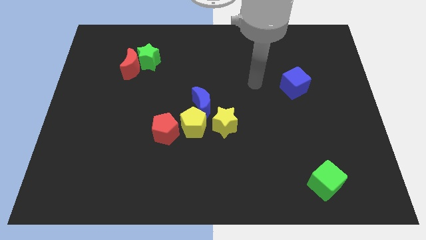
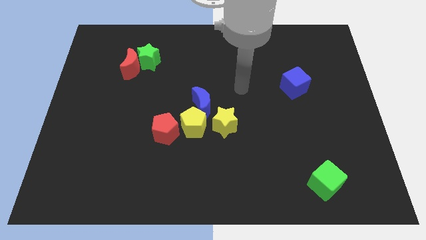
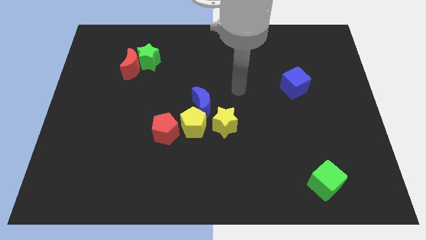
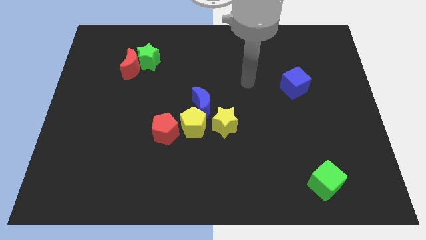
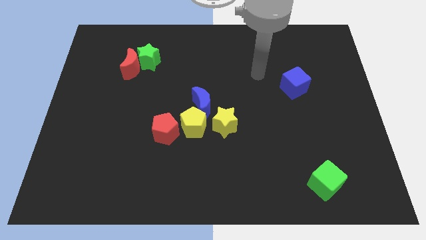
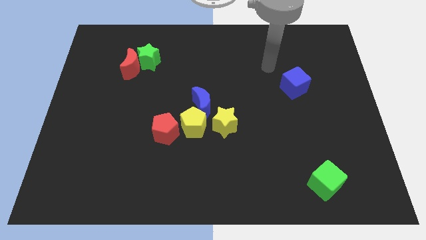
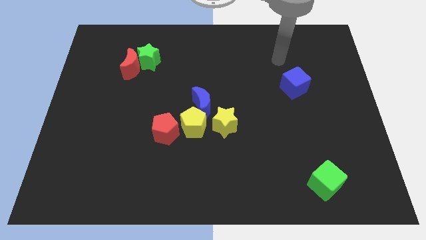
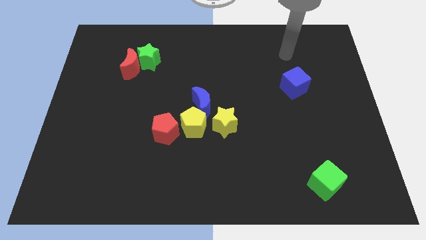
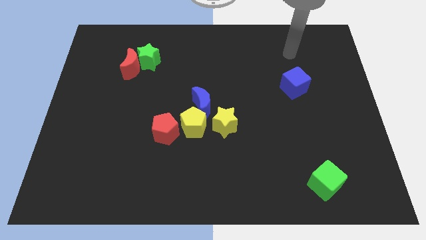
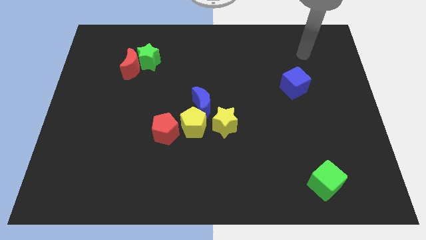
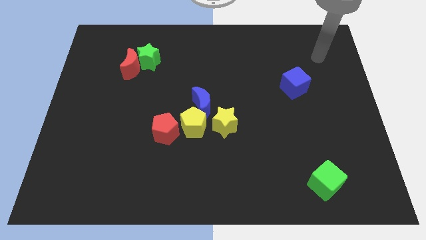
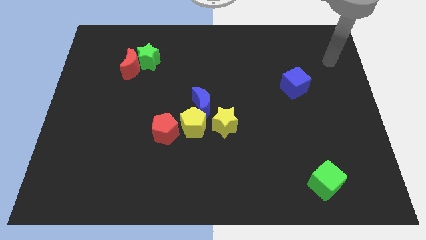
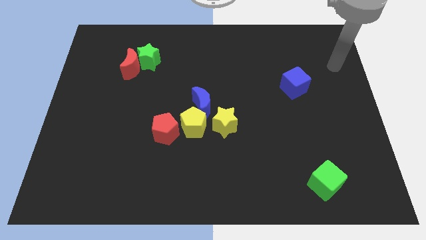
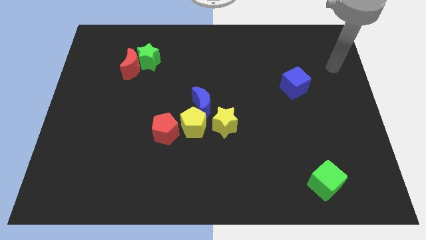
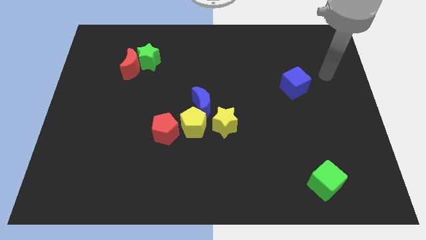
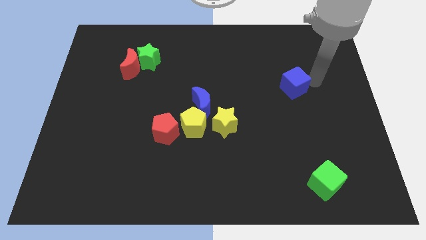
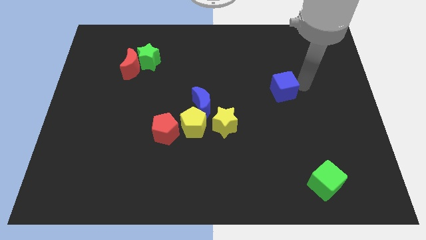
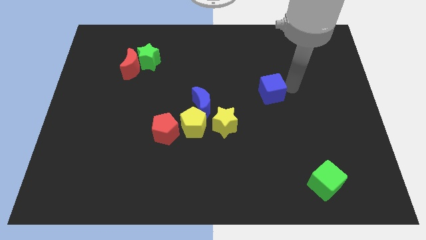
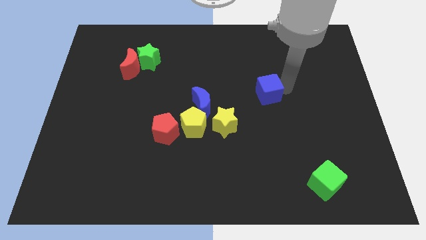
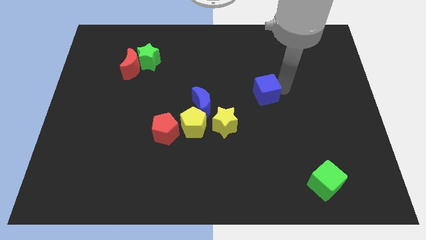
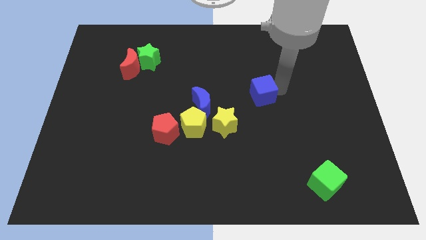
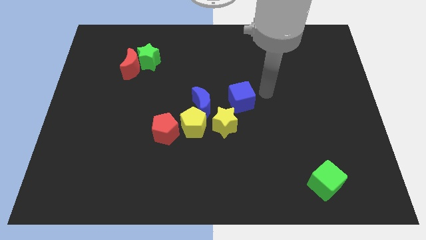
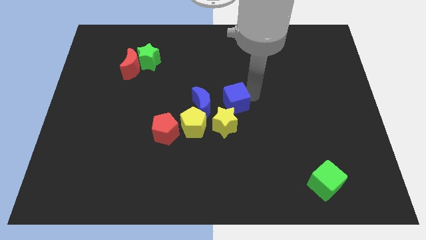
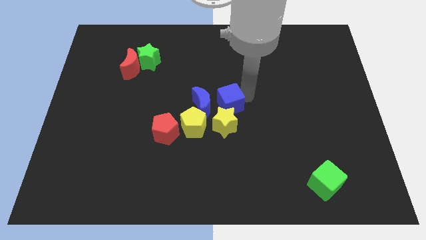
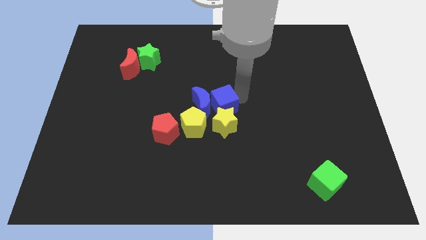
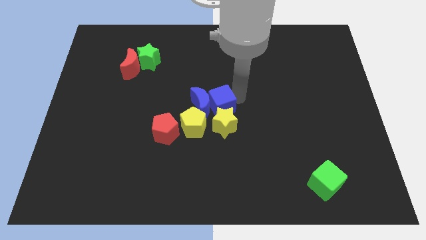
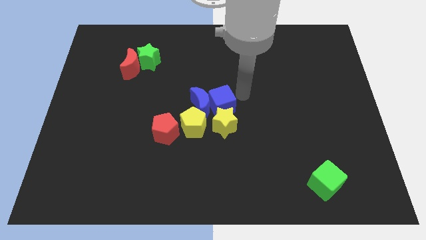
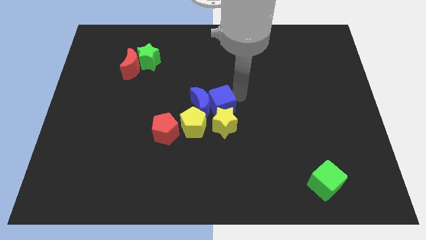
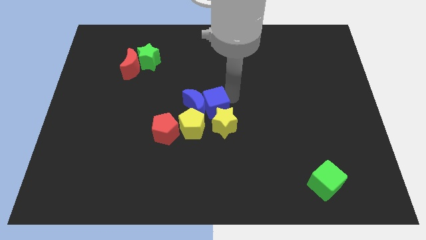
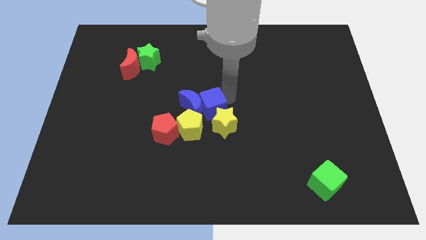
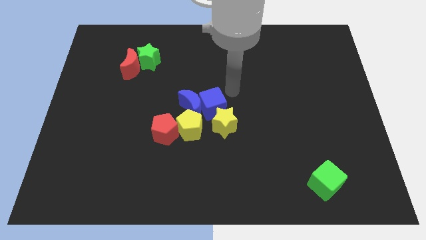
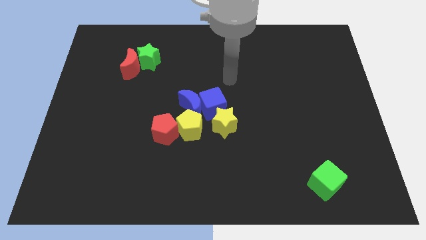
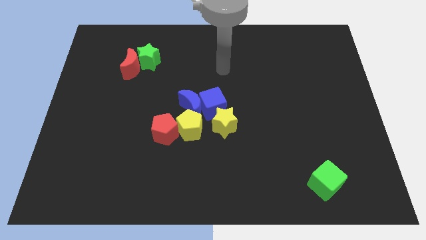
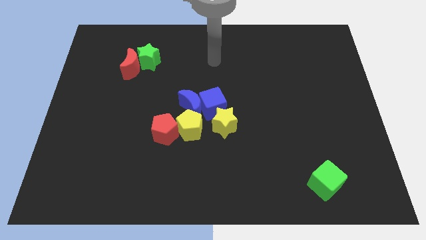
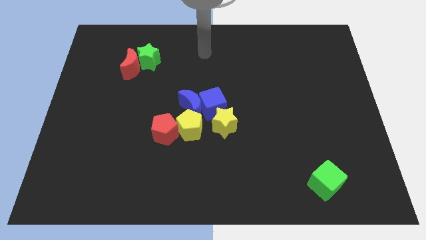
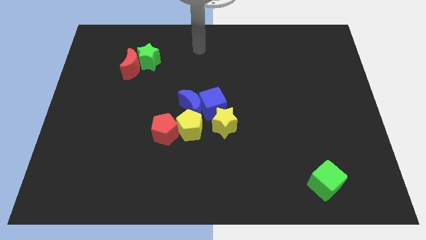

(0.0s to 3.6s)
push the blue cube into the blue moon

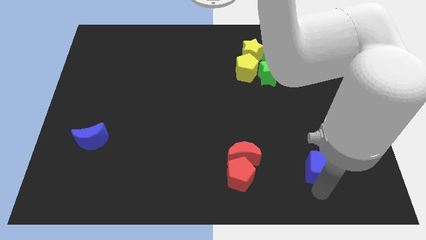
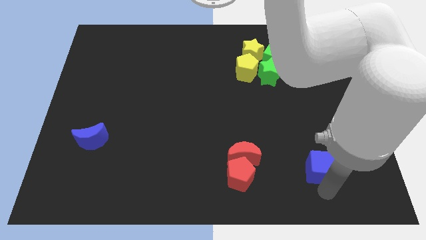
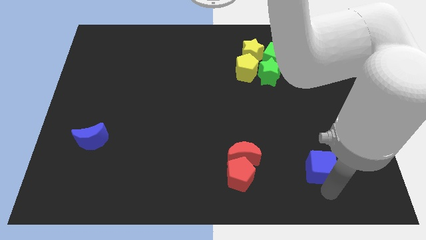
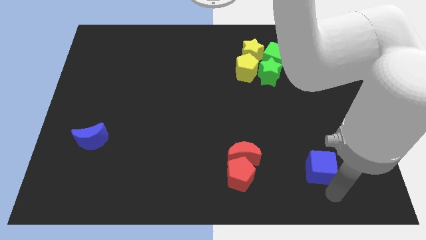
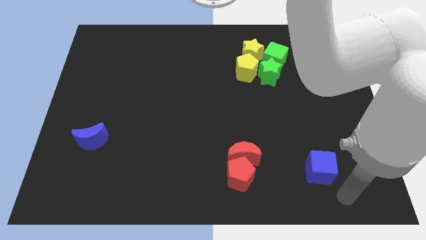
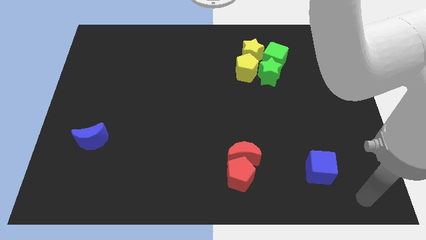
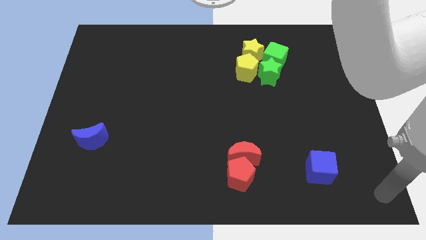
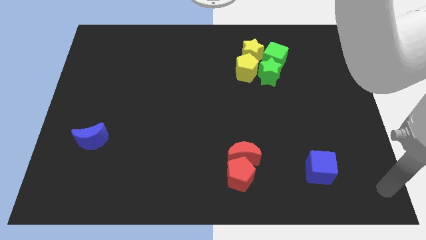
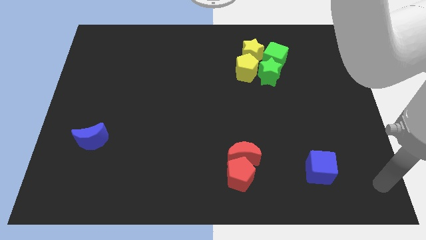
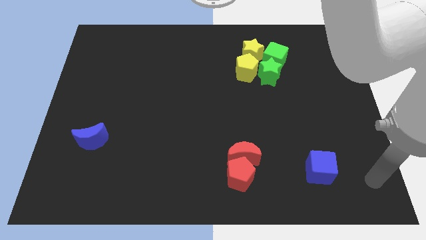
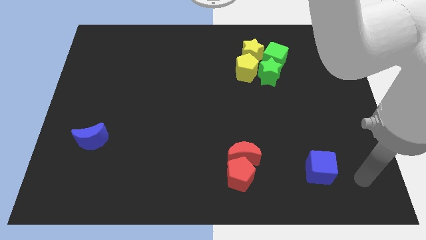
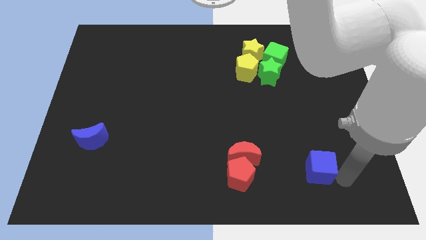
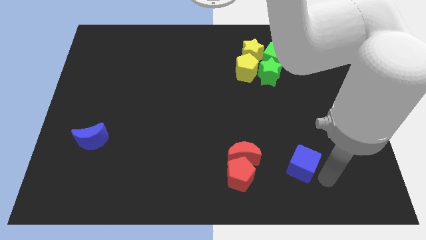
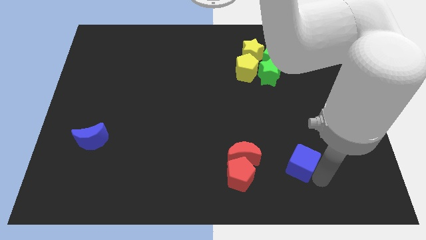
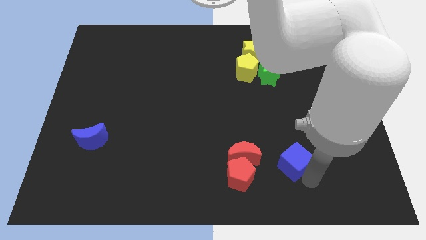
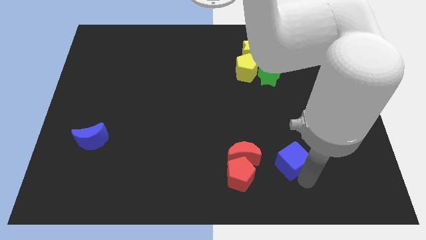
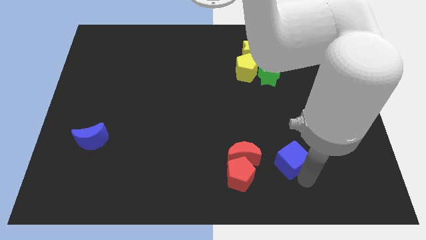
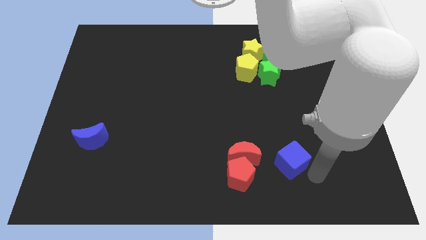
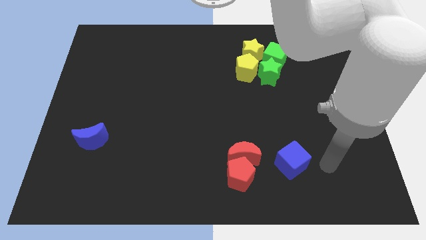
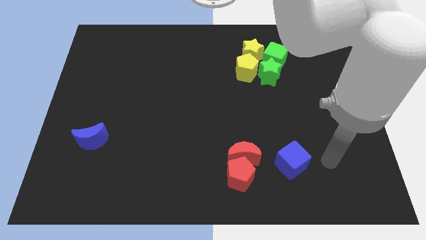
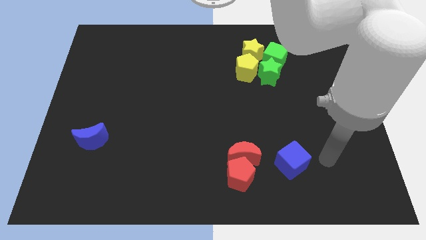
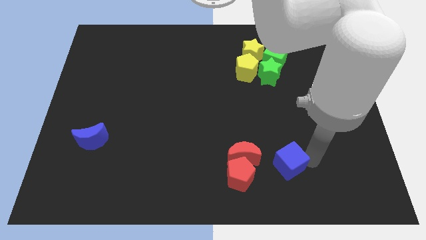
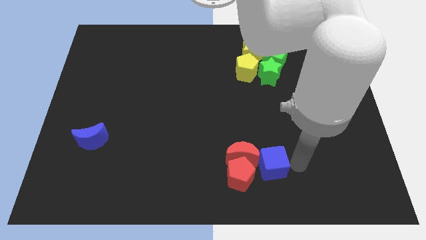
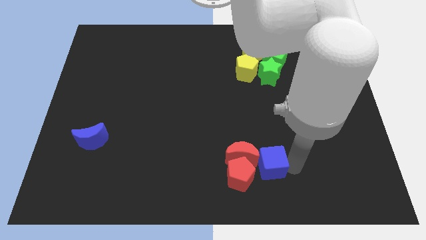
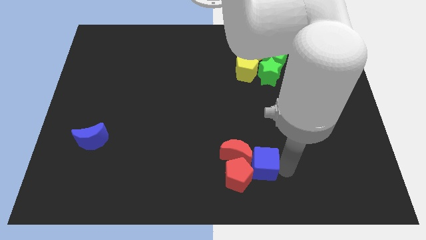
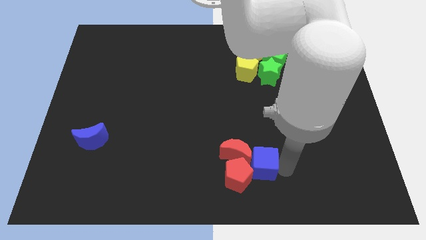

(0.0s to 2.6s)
push the blue cube into red blocks

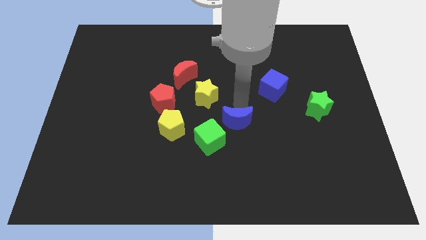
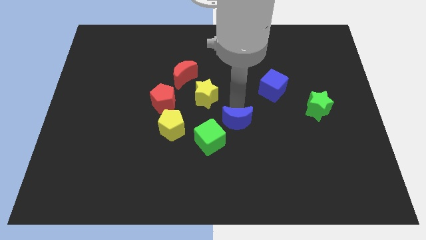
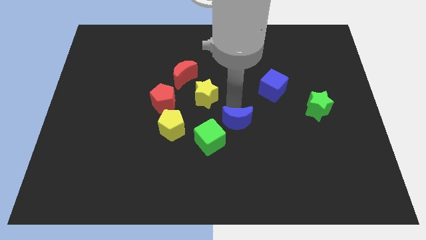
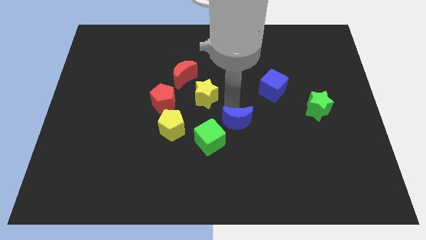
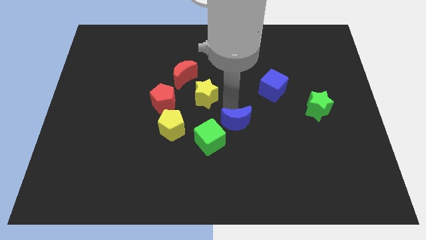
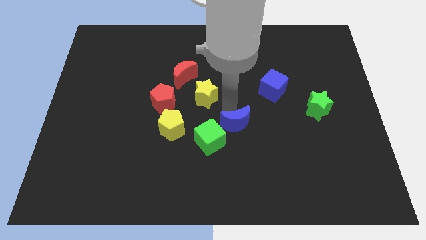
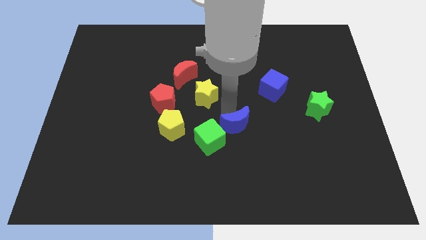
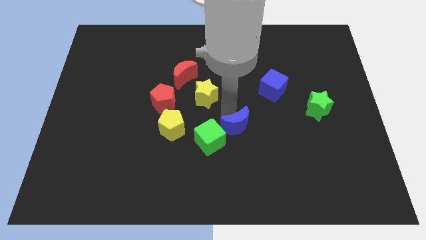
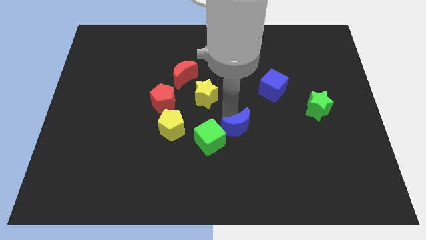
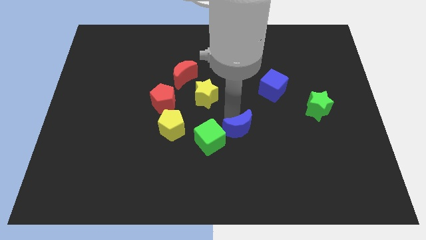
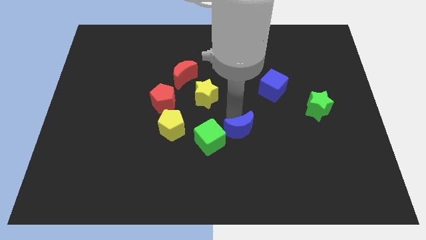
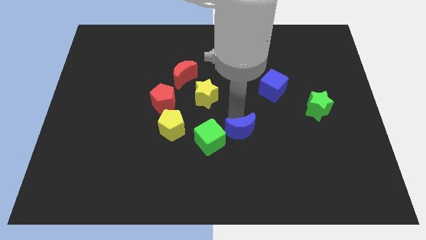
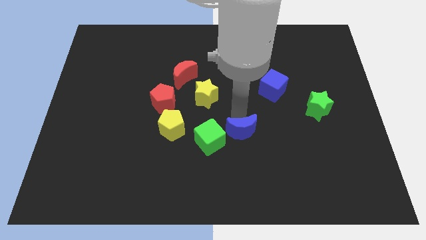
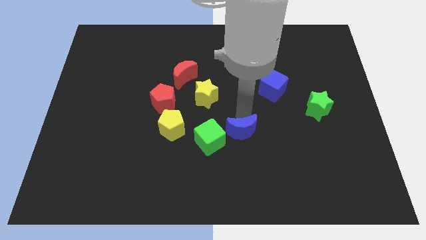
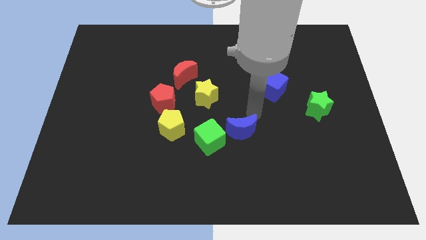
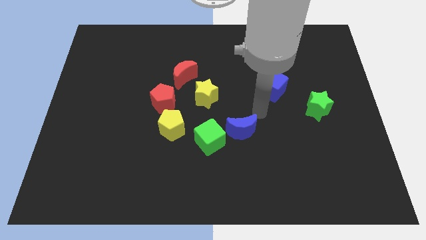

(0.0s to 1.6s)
push the blue crescent downwards to the right of green cube

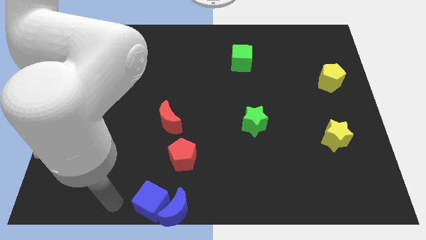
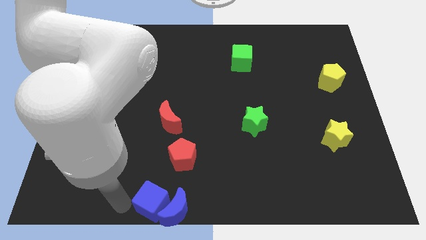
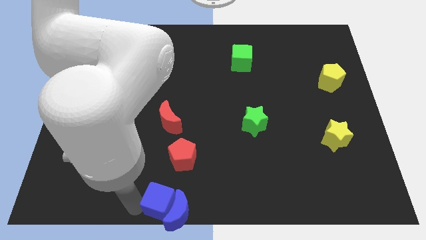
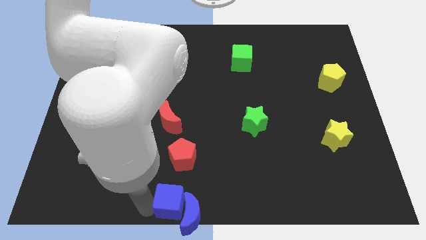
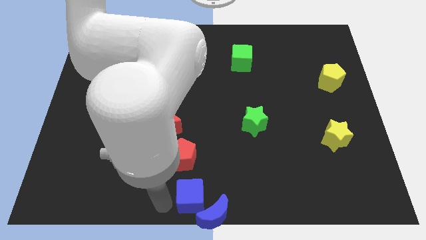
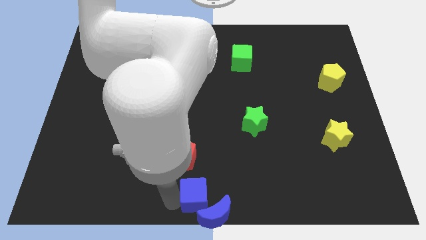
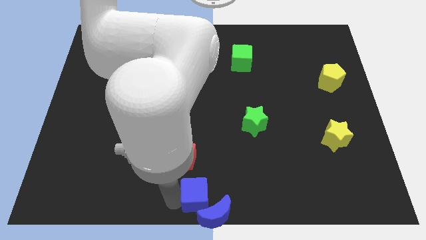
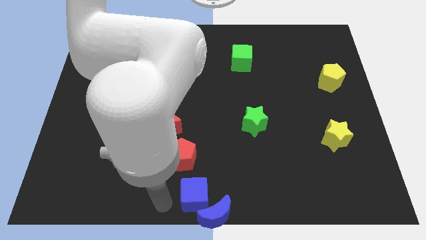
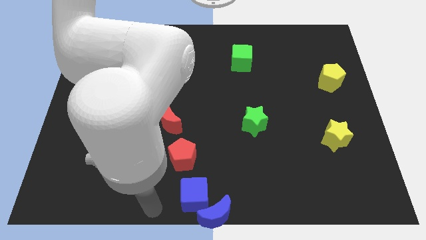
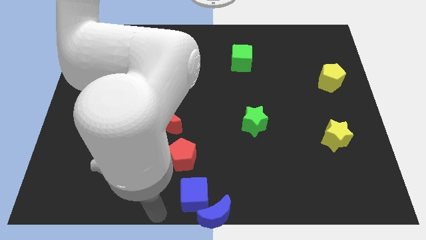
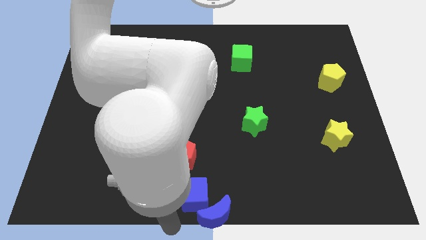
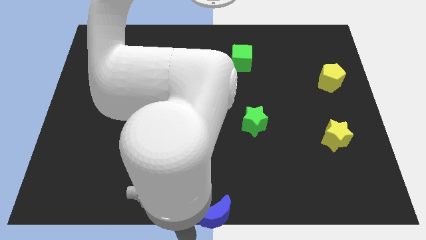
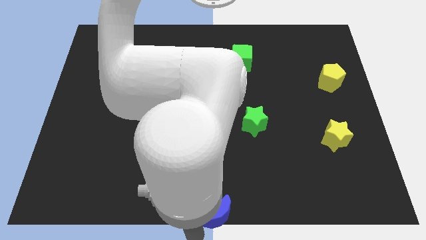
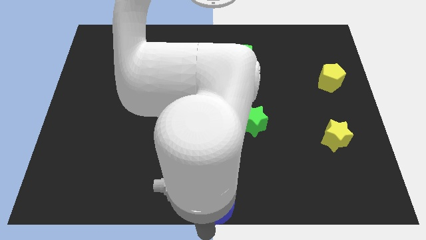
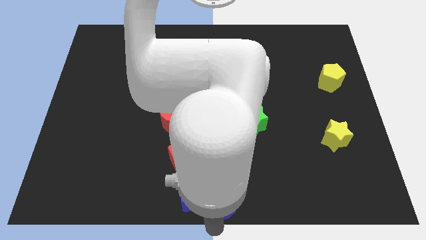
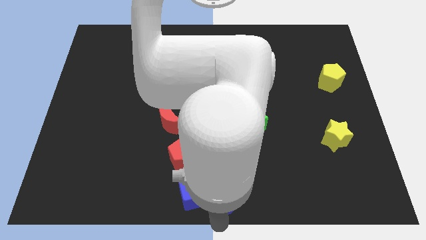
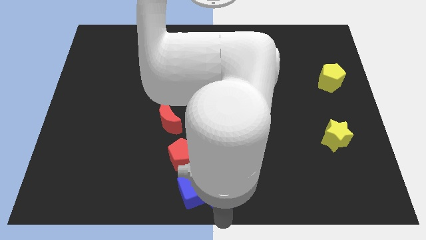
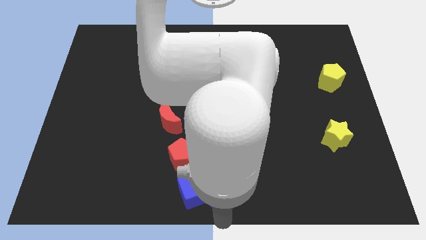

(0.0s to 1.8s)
push the blue blocks below red blocks
